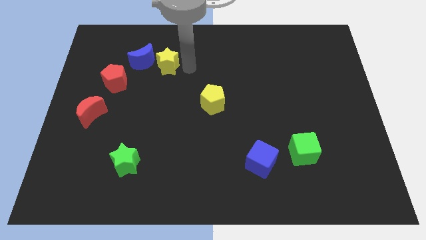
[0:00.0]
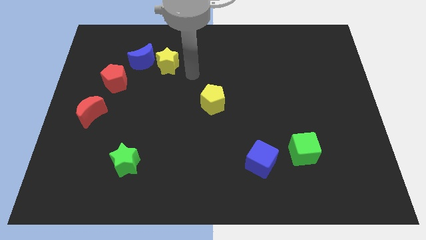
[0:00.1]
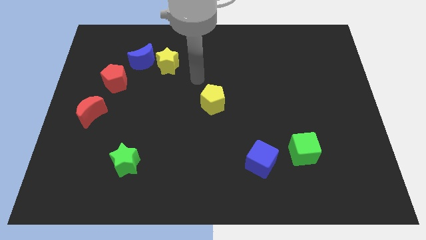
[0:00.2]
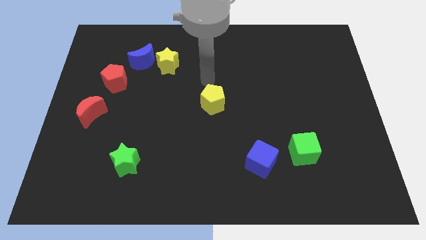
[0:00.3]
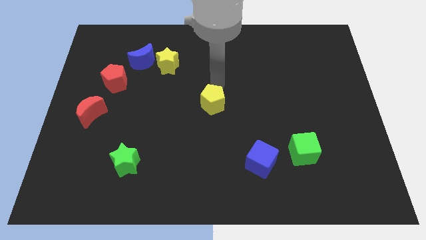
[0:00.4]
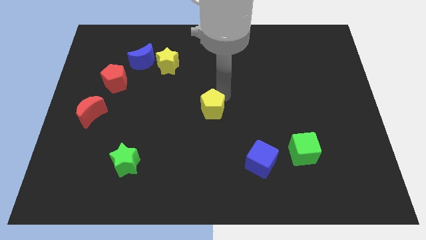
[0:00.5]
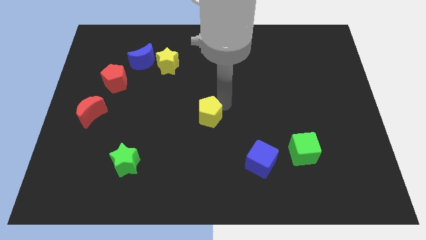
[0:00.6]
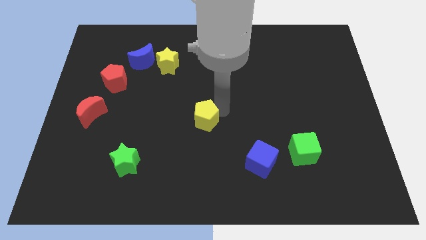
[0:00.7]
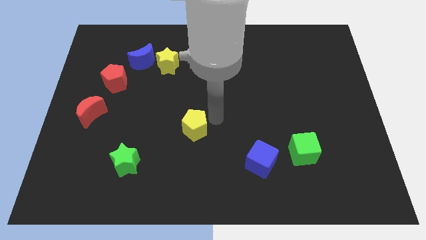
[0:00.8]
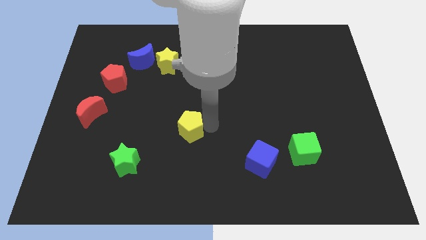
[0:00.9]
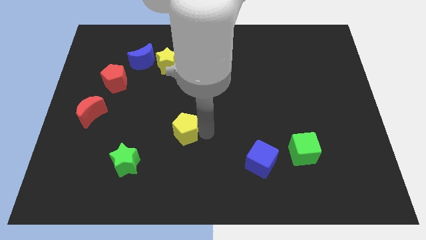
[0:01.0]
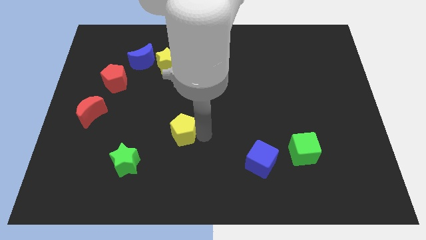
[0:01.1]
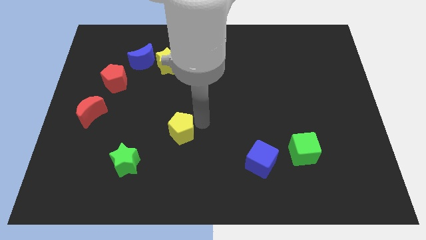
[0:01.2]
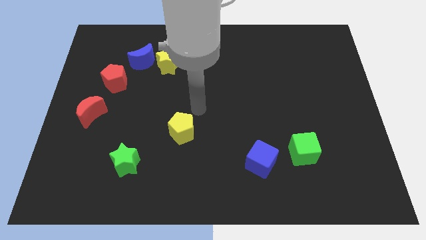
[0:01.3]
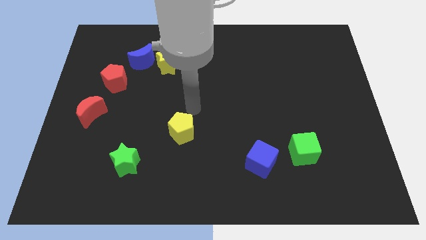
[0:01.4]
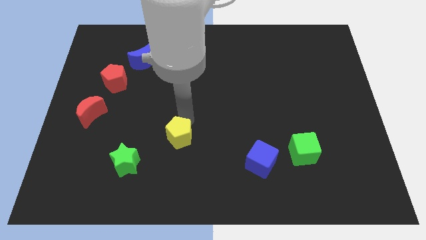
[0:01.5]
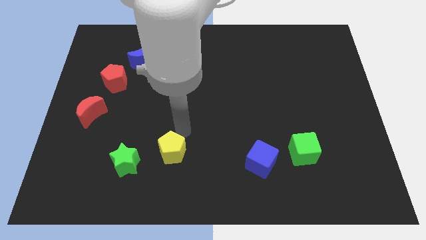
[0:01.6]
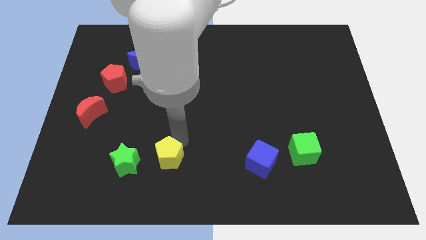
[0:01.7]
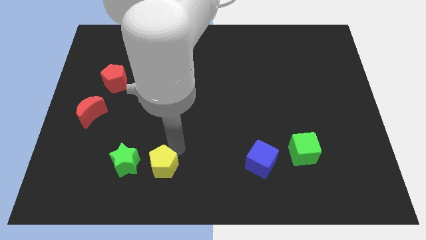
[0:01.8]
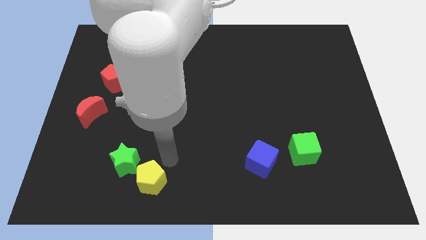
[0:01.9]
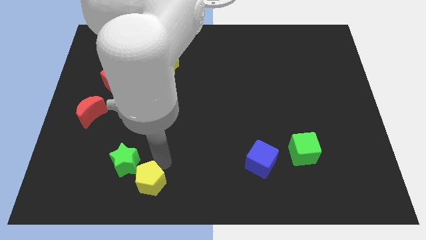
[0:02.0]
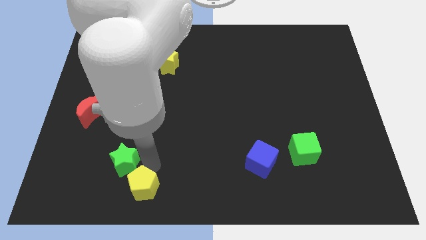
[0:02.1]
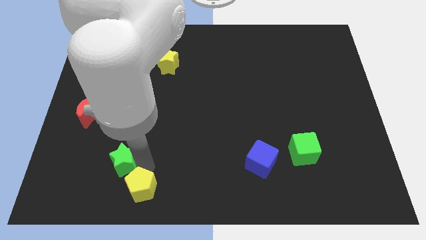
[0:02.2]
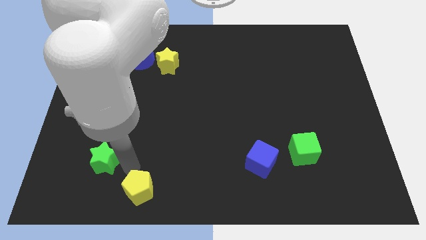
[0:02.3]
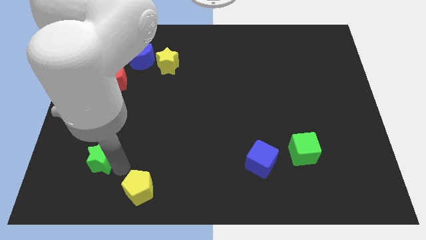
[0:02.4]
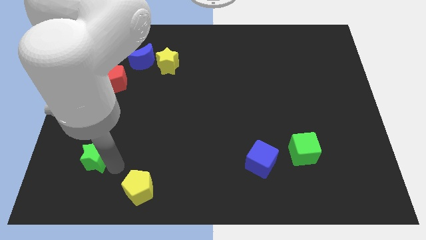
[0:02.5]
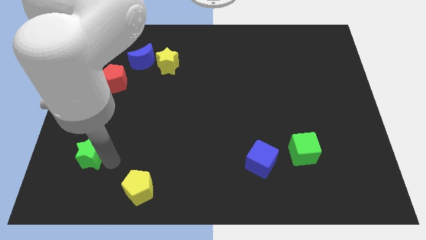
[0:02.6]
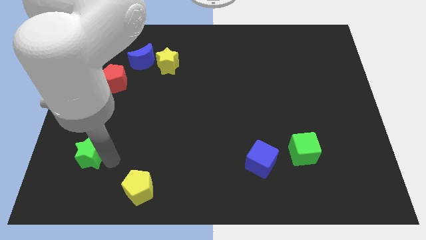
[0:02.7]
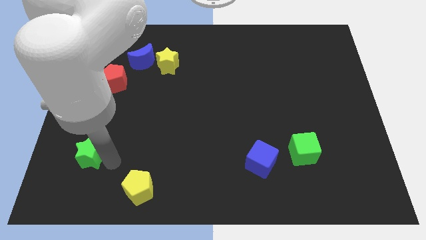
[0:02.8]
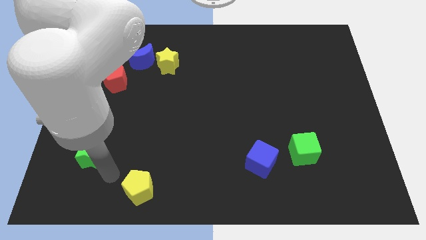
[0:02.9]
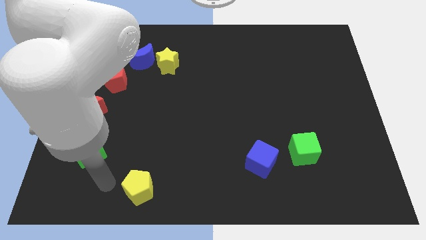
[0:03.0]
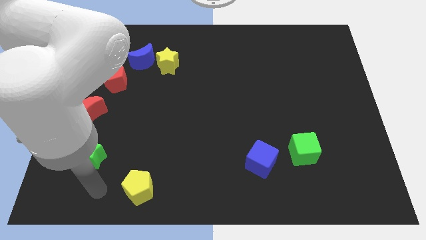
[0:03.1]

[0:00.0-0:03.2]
push the yellow pentagon towards the bottom side of the board

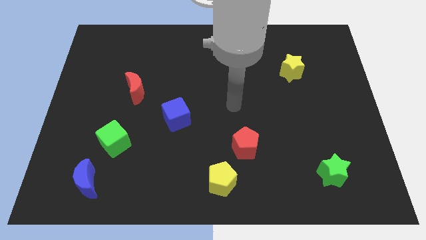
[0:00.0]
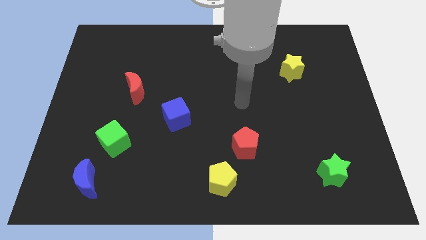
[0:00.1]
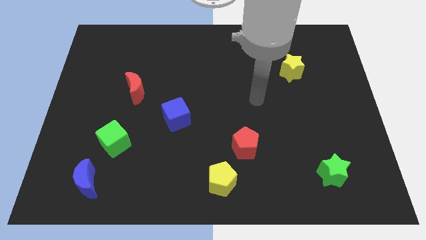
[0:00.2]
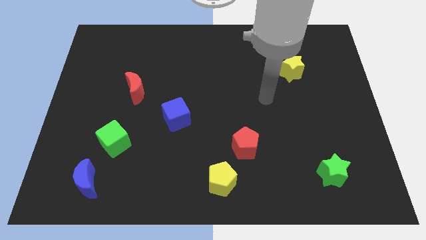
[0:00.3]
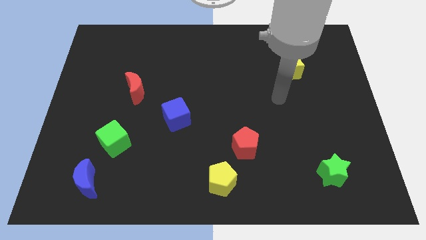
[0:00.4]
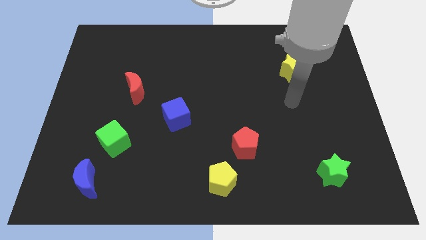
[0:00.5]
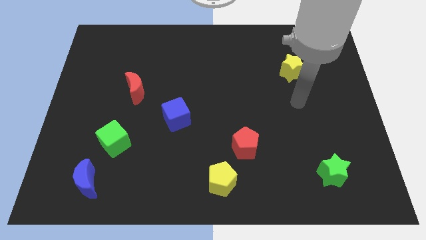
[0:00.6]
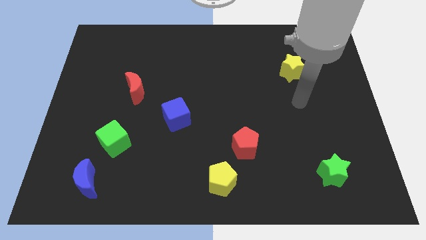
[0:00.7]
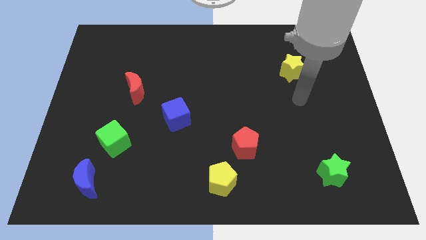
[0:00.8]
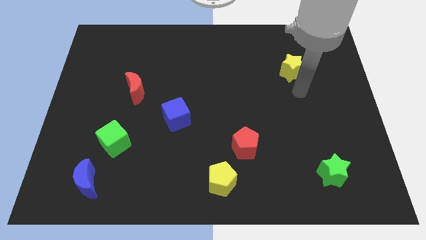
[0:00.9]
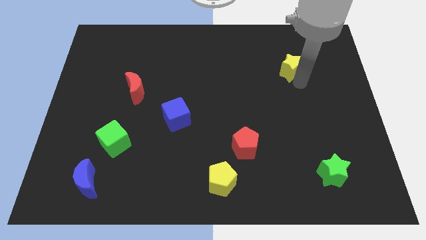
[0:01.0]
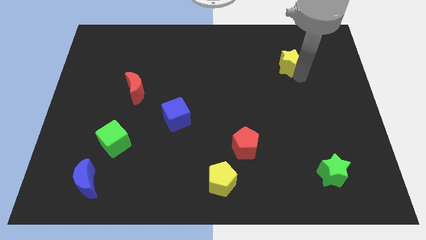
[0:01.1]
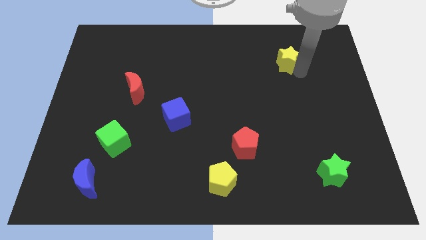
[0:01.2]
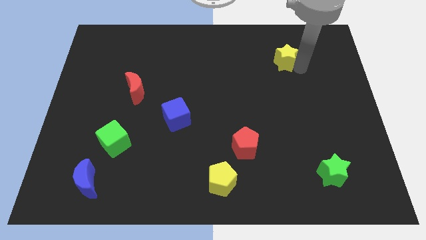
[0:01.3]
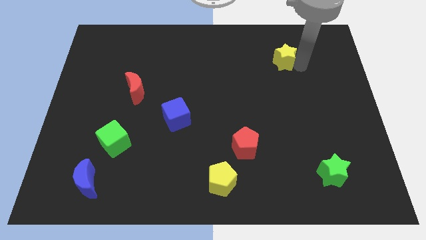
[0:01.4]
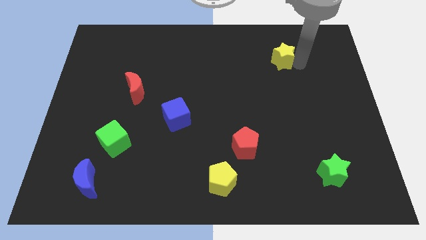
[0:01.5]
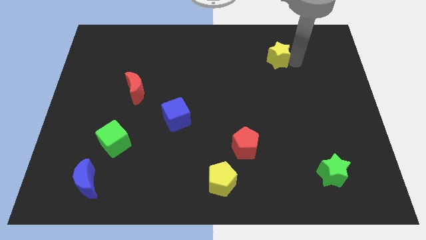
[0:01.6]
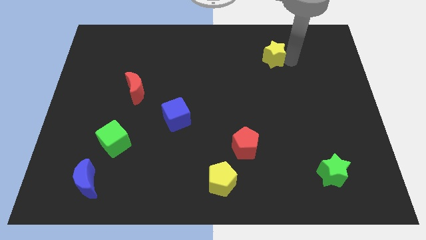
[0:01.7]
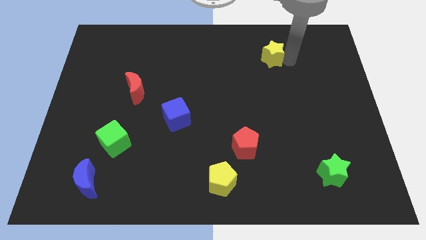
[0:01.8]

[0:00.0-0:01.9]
slightly push the yellow star to the top

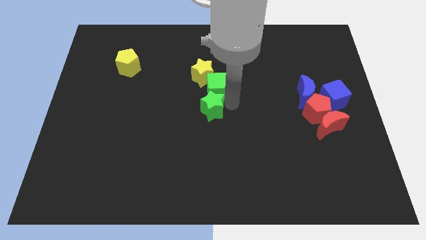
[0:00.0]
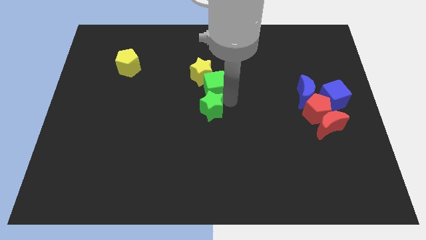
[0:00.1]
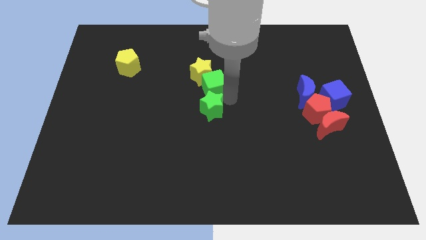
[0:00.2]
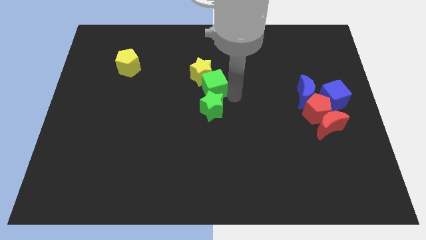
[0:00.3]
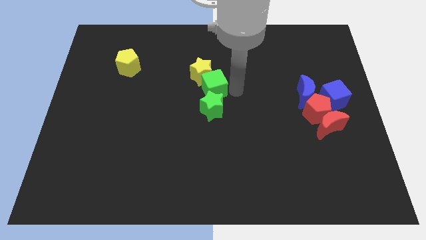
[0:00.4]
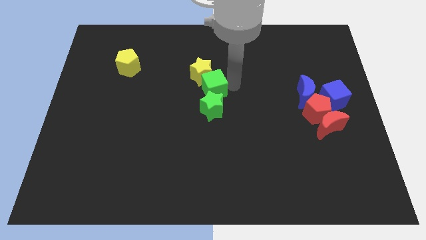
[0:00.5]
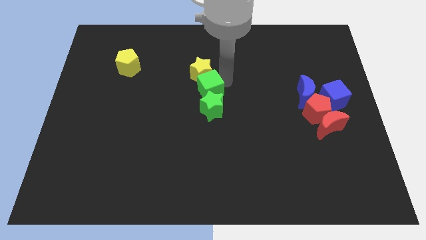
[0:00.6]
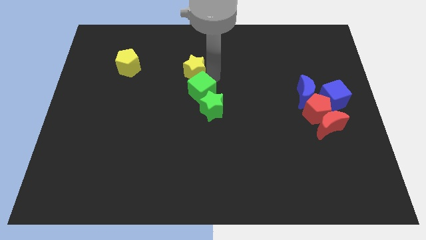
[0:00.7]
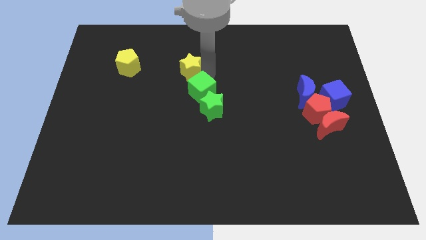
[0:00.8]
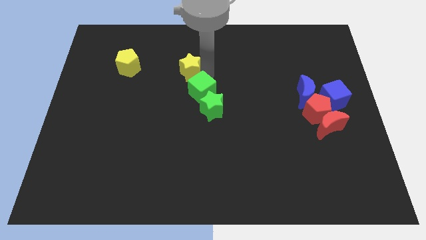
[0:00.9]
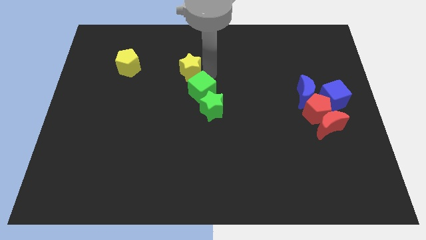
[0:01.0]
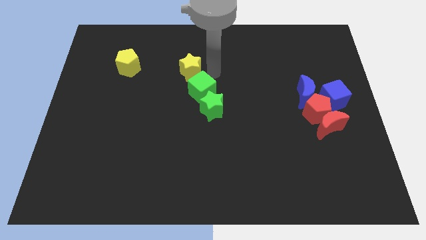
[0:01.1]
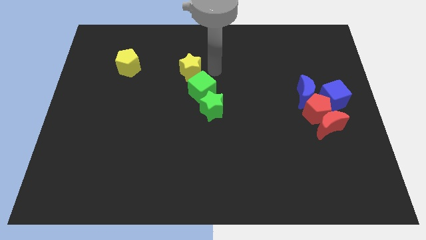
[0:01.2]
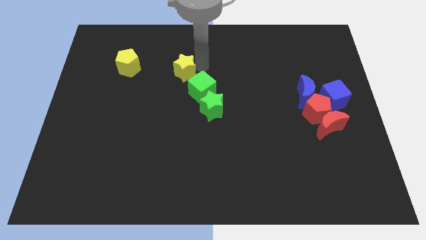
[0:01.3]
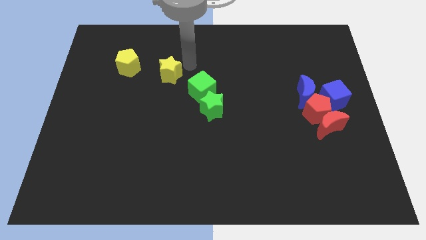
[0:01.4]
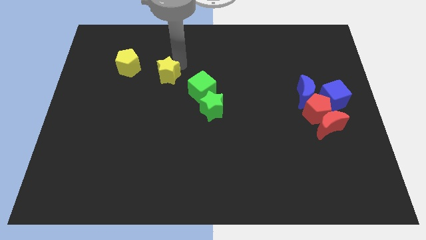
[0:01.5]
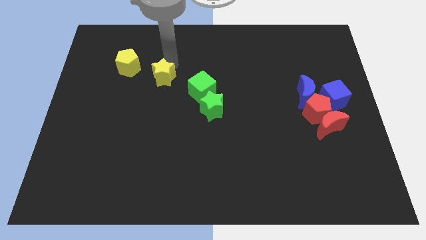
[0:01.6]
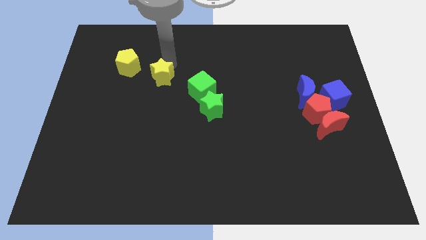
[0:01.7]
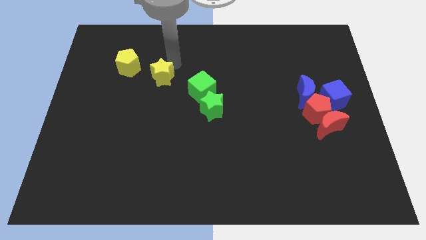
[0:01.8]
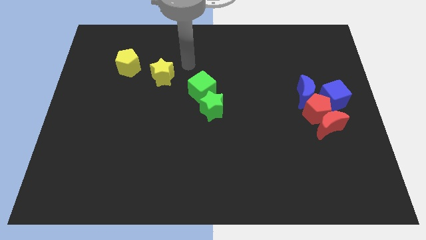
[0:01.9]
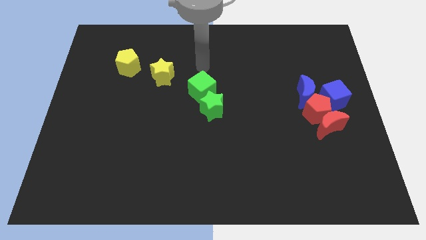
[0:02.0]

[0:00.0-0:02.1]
separate yellow star from green cube

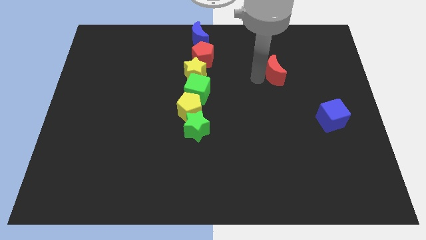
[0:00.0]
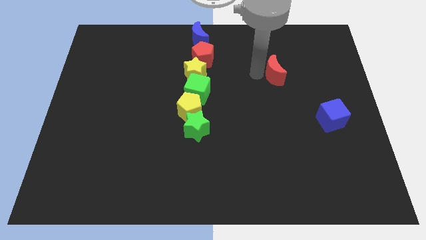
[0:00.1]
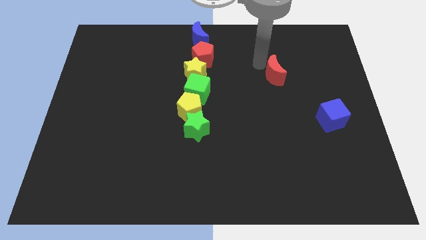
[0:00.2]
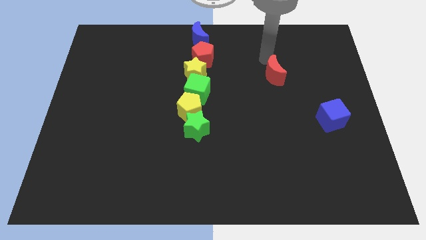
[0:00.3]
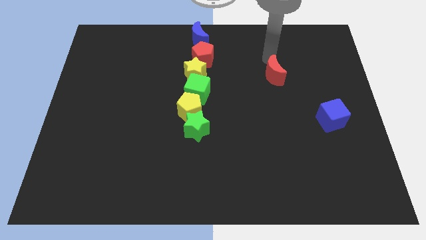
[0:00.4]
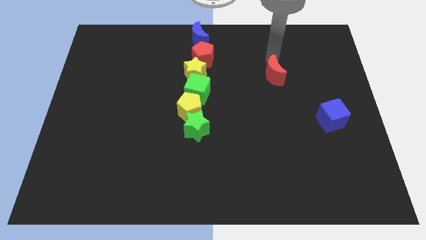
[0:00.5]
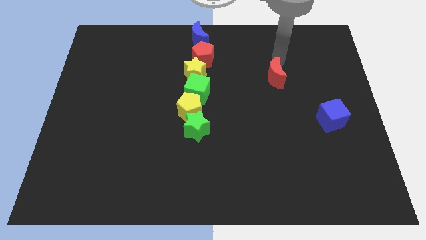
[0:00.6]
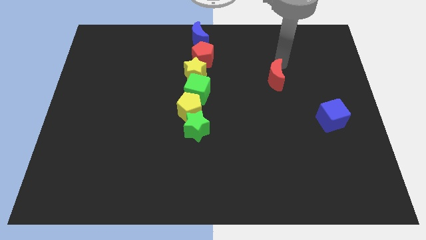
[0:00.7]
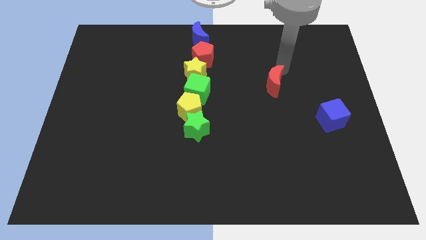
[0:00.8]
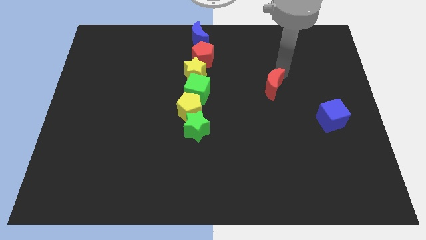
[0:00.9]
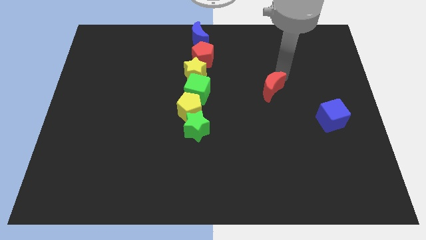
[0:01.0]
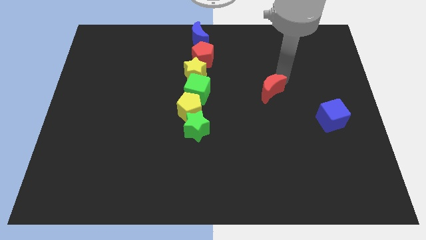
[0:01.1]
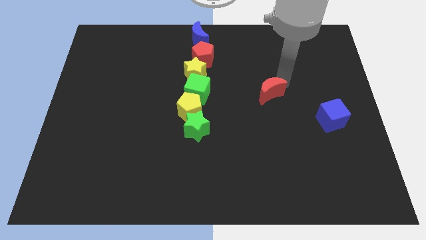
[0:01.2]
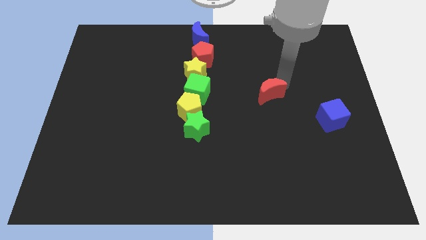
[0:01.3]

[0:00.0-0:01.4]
push the red moon downward

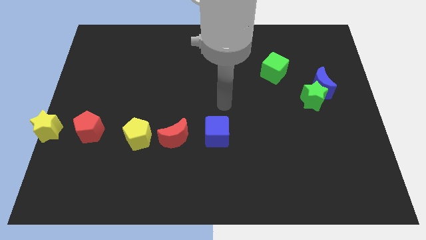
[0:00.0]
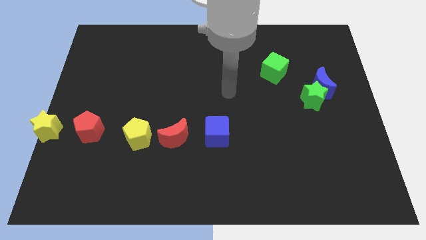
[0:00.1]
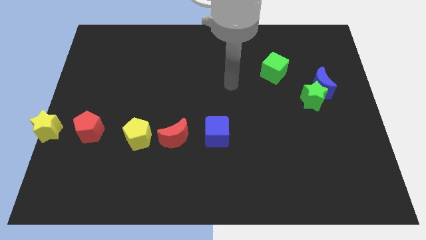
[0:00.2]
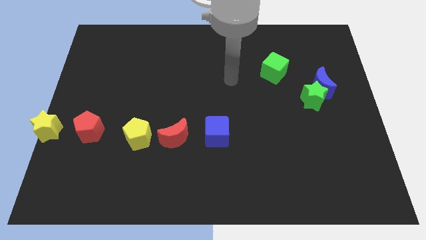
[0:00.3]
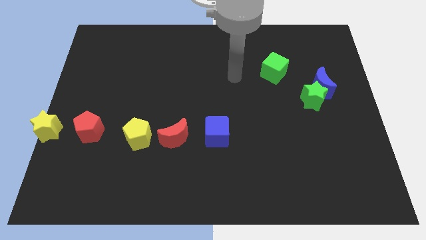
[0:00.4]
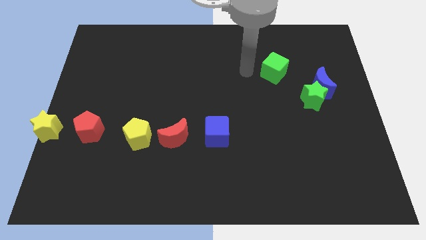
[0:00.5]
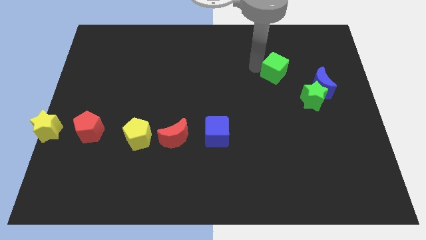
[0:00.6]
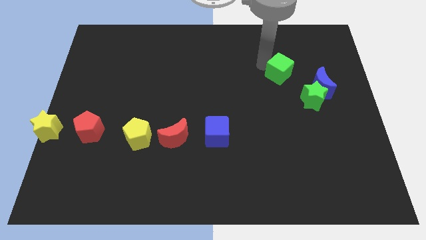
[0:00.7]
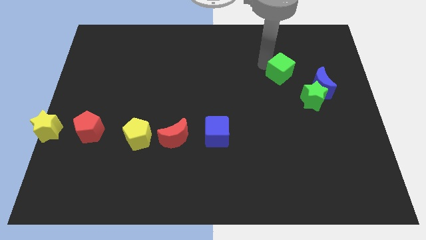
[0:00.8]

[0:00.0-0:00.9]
move your arm away from blue cube
